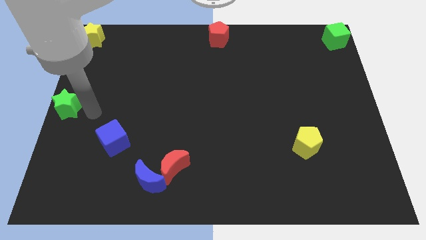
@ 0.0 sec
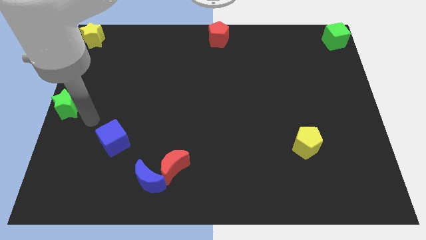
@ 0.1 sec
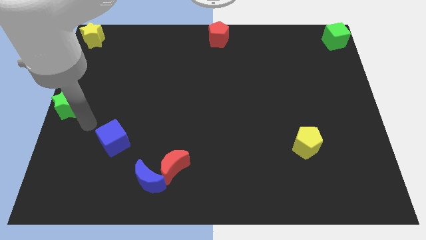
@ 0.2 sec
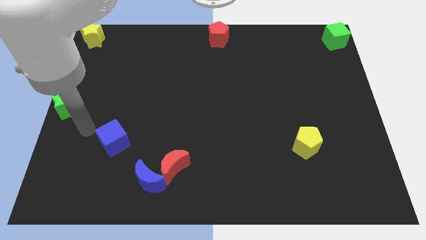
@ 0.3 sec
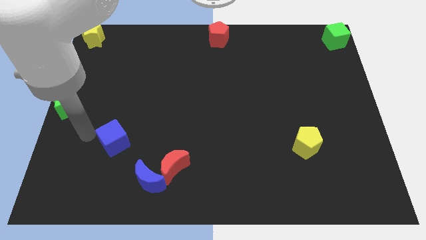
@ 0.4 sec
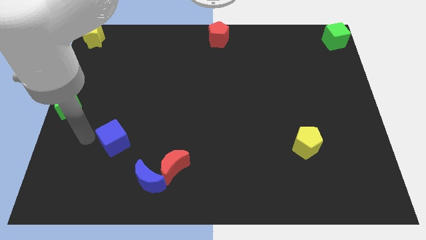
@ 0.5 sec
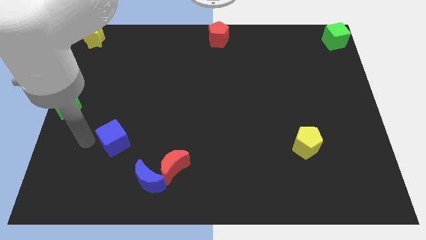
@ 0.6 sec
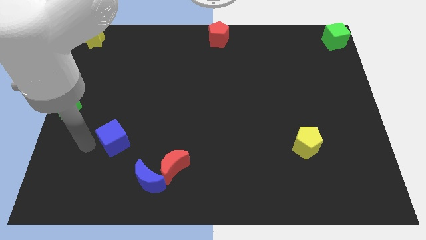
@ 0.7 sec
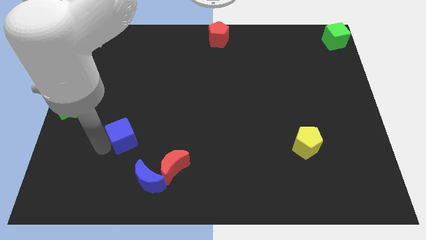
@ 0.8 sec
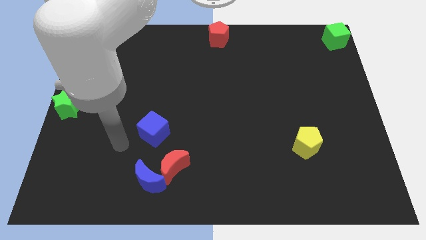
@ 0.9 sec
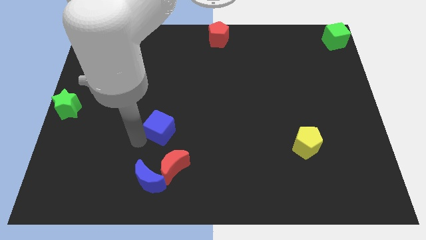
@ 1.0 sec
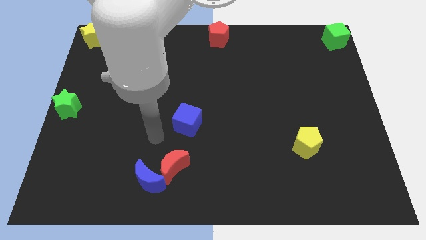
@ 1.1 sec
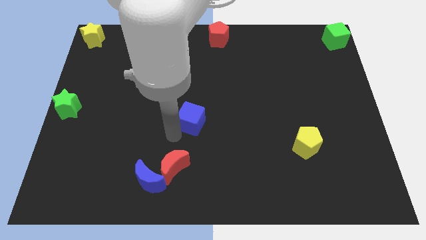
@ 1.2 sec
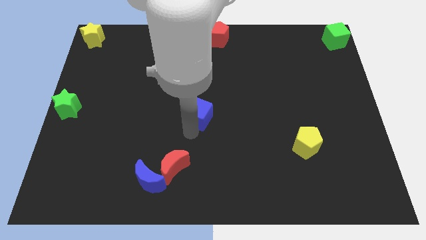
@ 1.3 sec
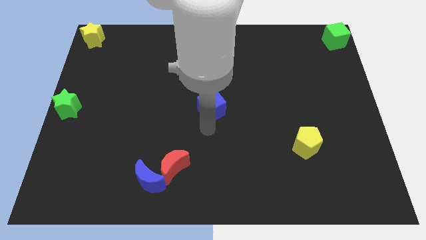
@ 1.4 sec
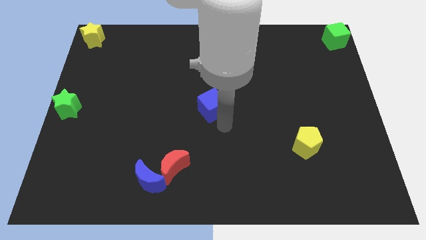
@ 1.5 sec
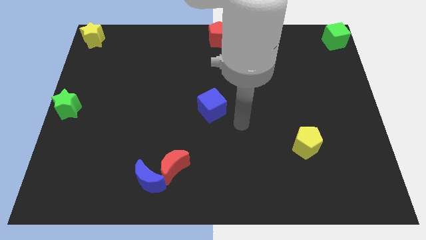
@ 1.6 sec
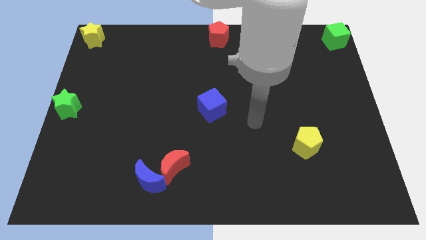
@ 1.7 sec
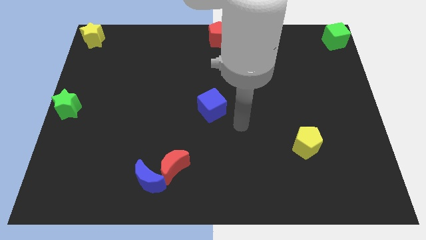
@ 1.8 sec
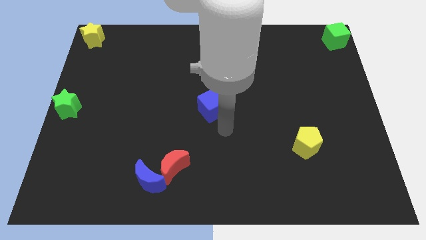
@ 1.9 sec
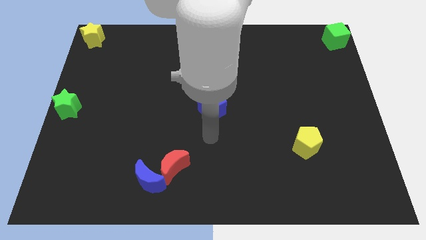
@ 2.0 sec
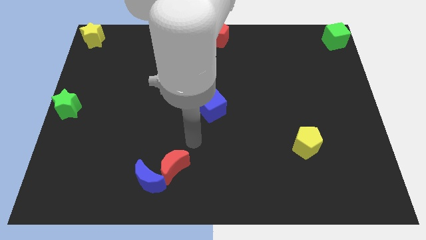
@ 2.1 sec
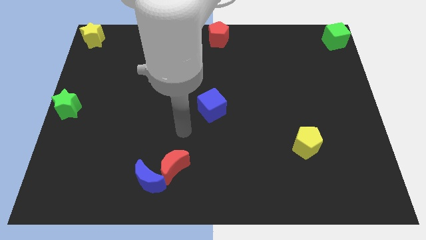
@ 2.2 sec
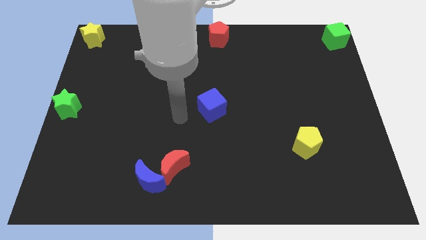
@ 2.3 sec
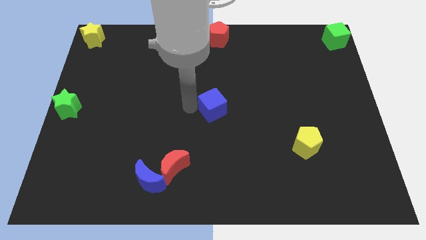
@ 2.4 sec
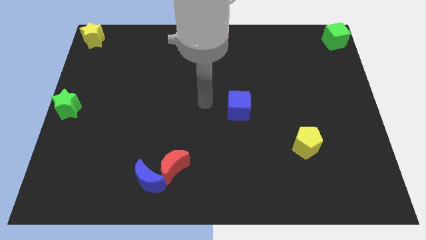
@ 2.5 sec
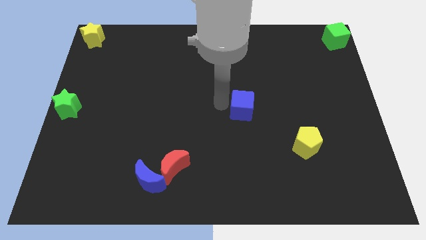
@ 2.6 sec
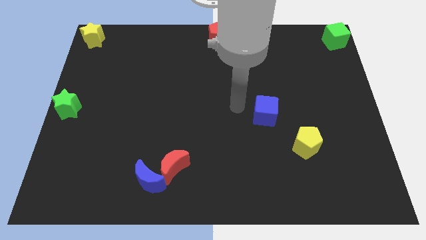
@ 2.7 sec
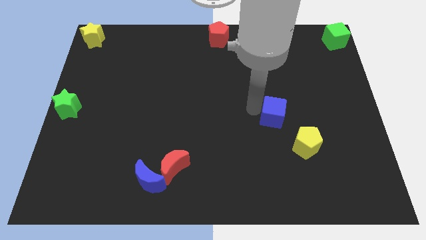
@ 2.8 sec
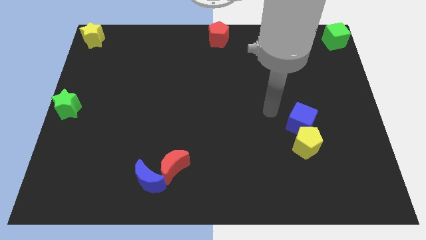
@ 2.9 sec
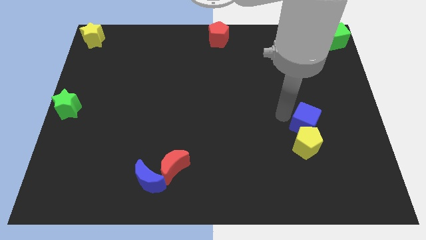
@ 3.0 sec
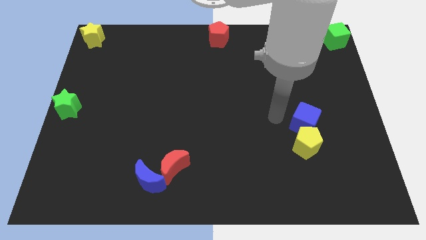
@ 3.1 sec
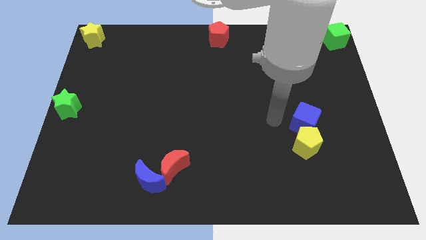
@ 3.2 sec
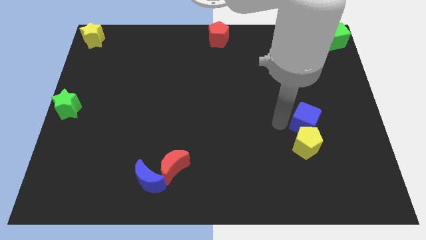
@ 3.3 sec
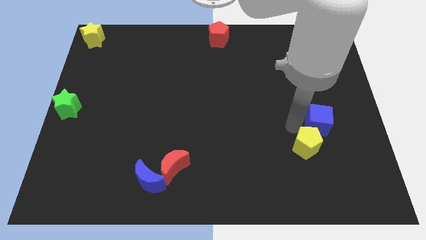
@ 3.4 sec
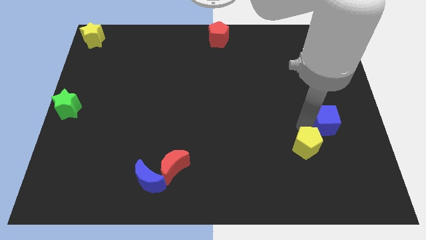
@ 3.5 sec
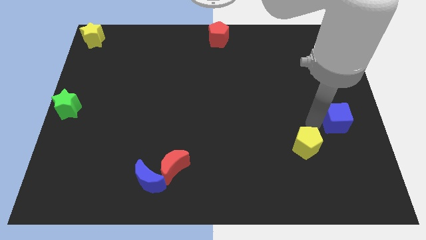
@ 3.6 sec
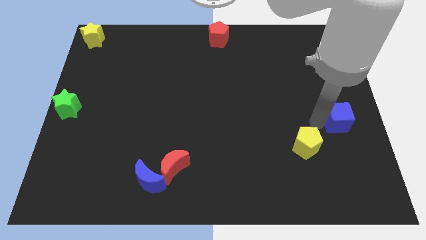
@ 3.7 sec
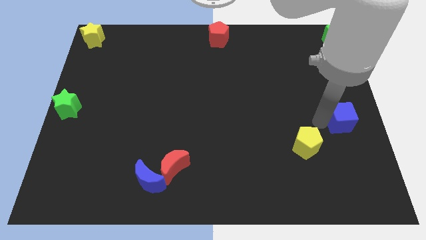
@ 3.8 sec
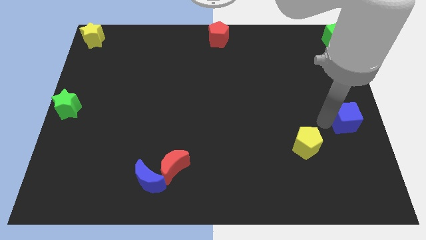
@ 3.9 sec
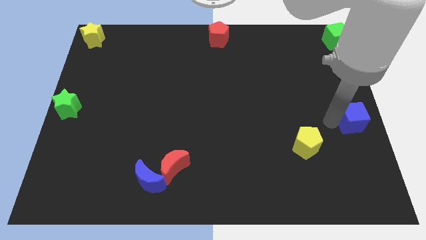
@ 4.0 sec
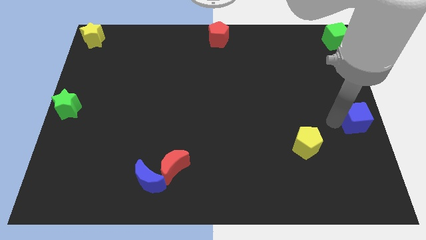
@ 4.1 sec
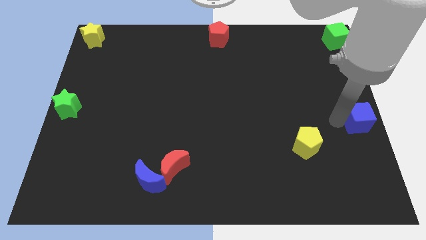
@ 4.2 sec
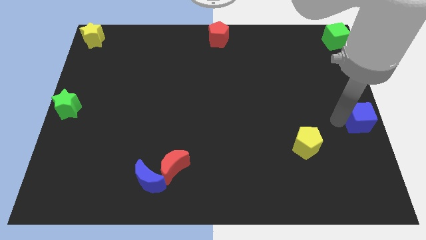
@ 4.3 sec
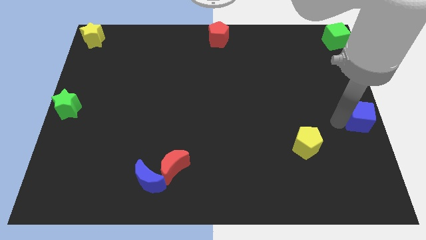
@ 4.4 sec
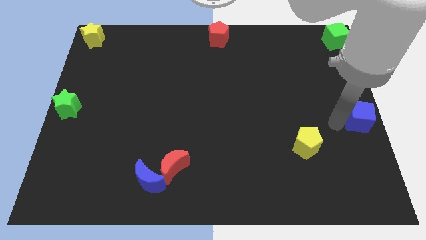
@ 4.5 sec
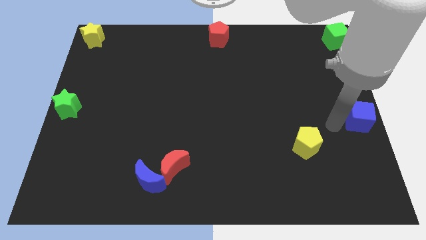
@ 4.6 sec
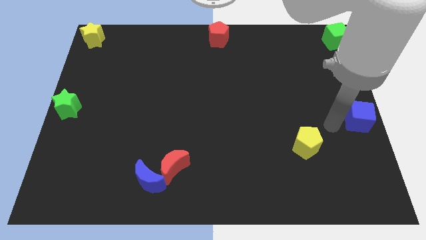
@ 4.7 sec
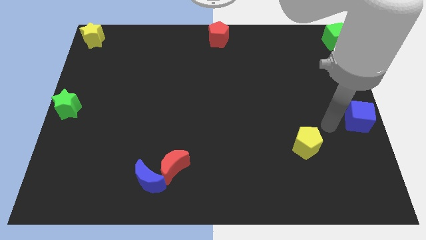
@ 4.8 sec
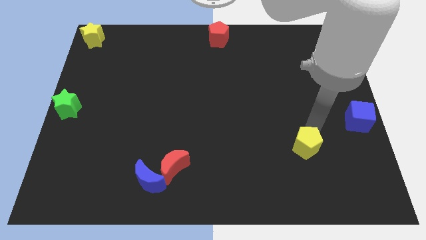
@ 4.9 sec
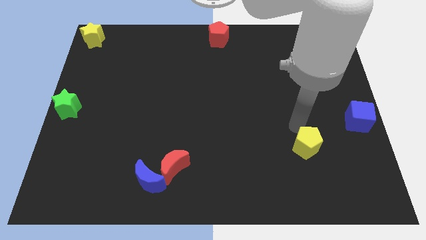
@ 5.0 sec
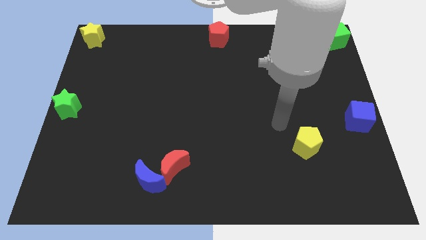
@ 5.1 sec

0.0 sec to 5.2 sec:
slide the blue cube to the right center of the board

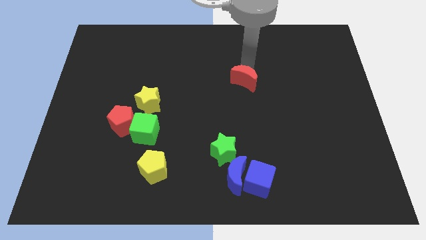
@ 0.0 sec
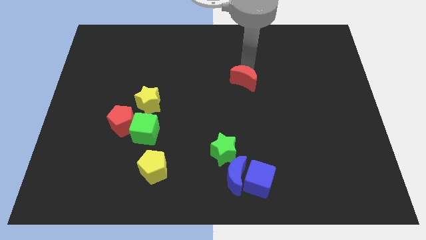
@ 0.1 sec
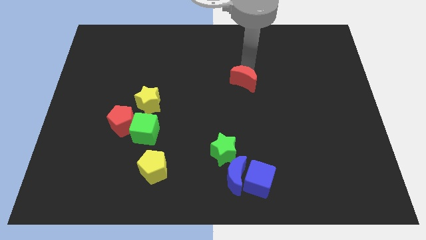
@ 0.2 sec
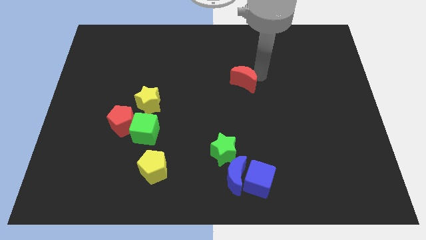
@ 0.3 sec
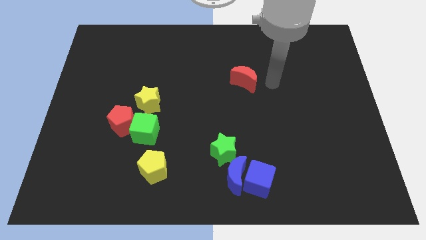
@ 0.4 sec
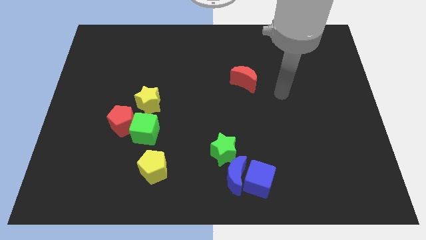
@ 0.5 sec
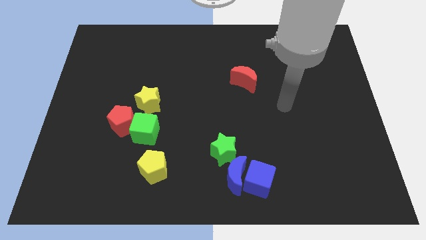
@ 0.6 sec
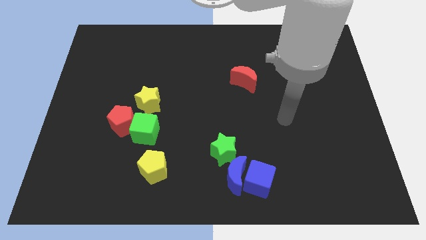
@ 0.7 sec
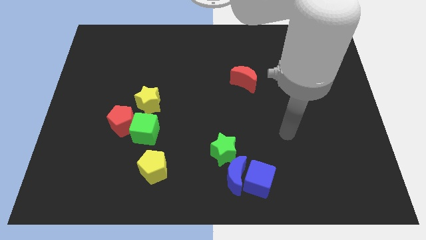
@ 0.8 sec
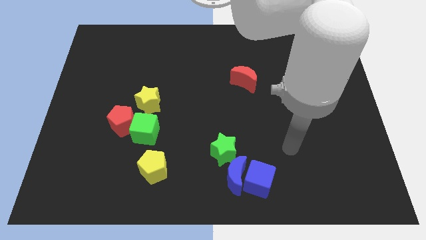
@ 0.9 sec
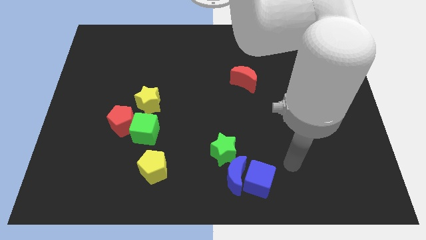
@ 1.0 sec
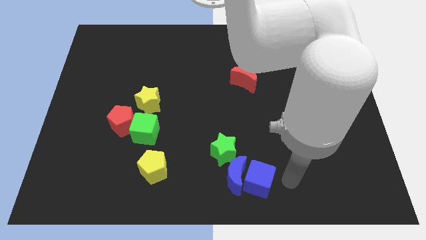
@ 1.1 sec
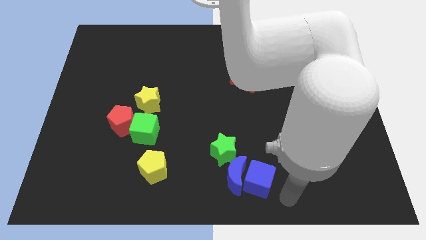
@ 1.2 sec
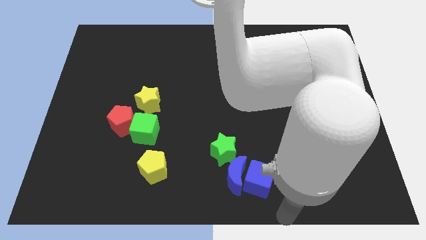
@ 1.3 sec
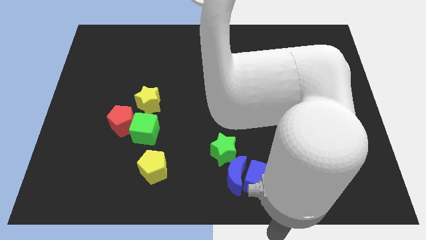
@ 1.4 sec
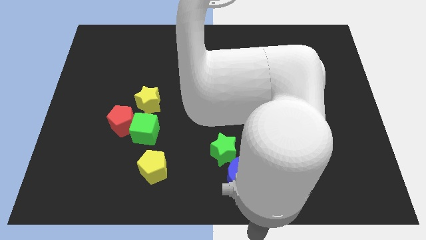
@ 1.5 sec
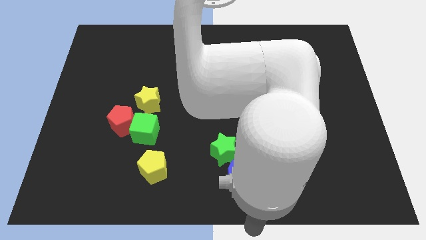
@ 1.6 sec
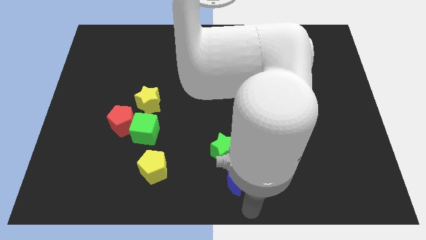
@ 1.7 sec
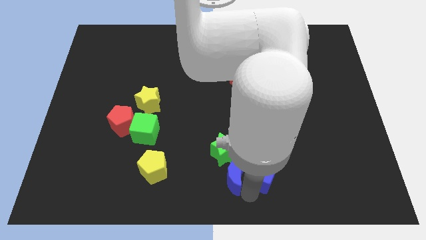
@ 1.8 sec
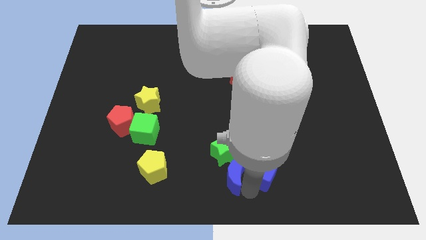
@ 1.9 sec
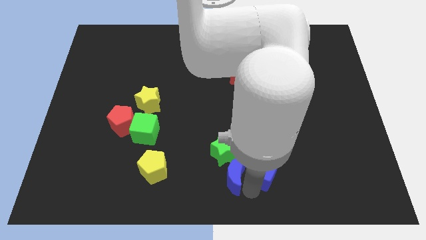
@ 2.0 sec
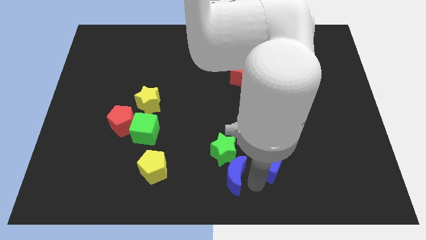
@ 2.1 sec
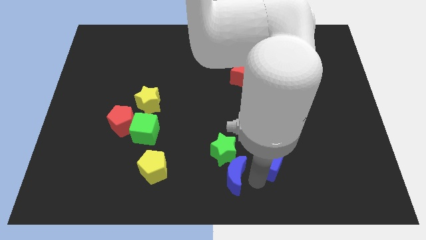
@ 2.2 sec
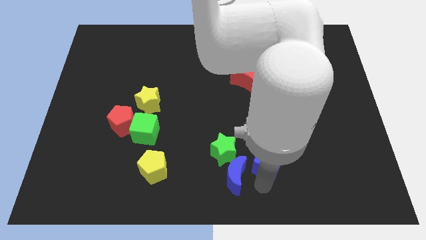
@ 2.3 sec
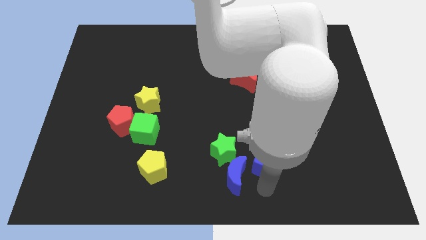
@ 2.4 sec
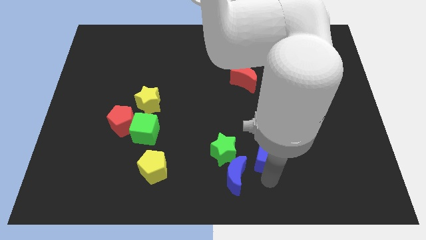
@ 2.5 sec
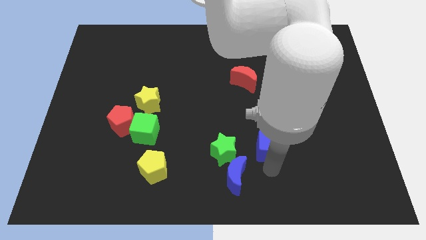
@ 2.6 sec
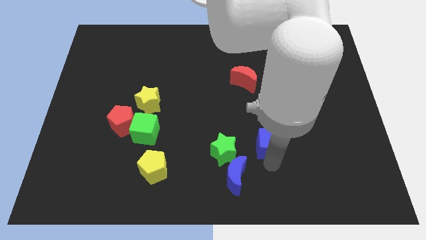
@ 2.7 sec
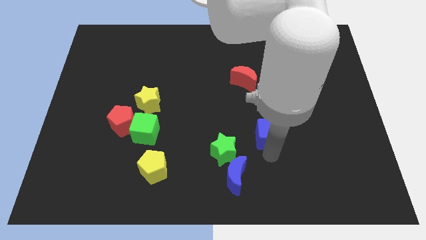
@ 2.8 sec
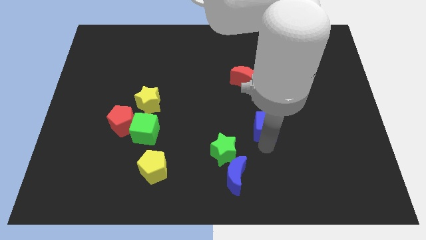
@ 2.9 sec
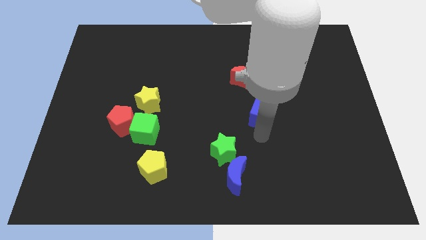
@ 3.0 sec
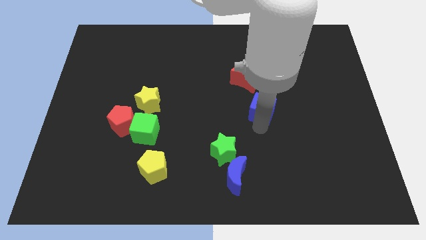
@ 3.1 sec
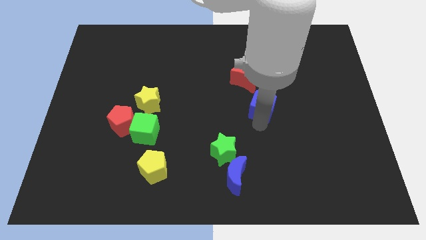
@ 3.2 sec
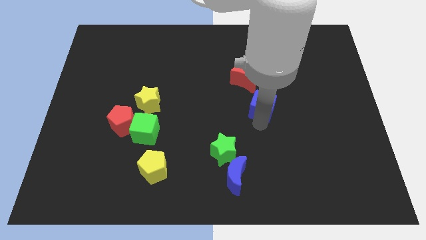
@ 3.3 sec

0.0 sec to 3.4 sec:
push the blue cube diagonally top right to green star

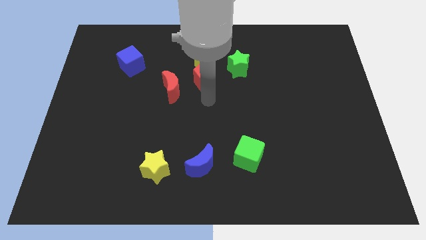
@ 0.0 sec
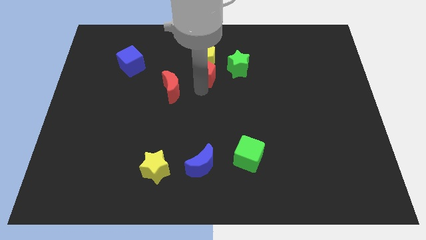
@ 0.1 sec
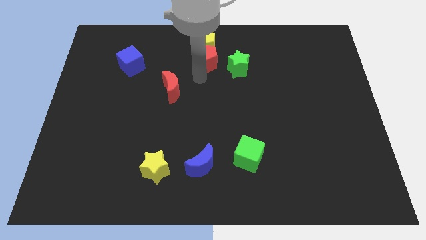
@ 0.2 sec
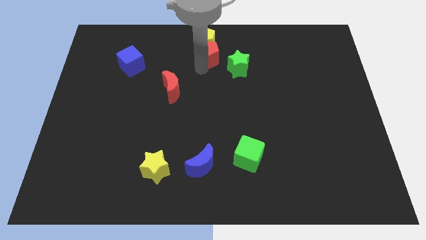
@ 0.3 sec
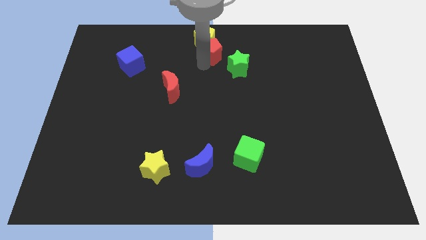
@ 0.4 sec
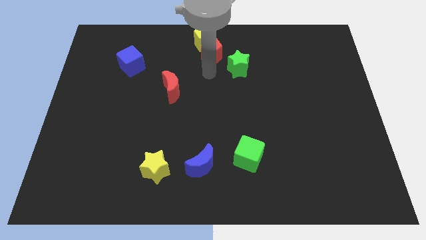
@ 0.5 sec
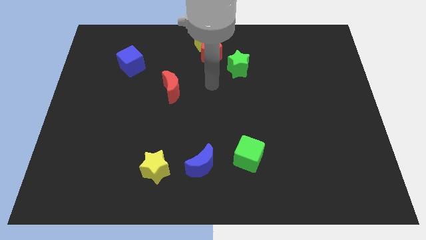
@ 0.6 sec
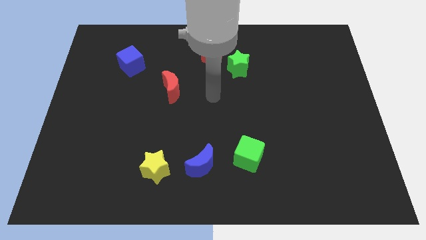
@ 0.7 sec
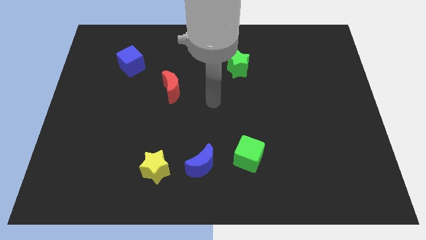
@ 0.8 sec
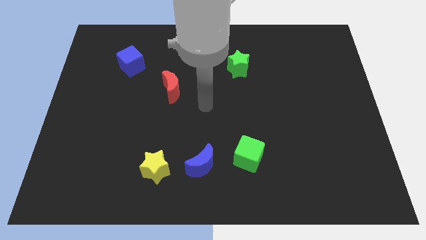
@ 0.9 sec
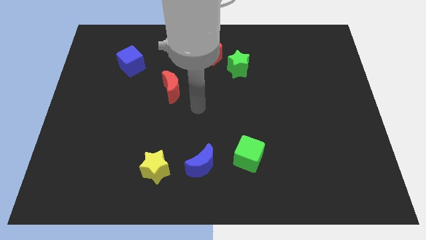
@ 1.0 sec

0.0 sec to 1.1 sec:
push the red pentagon slightly towards up
